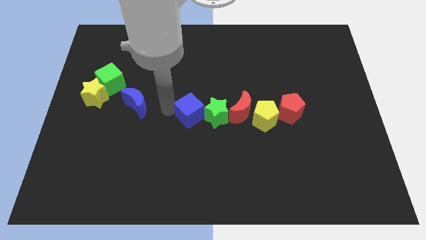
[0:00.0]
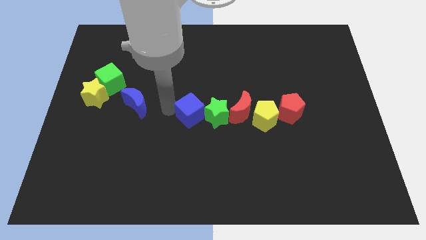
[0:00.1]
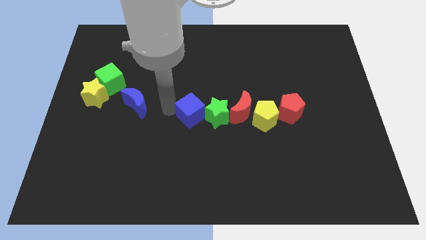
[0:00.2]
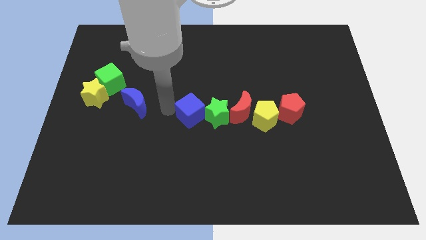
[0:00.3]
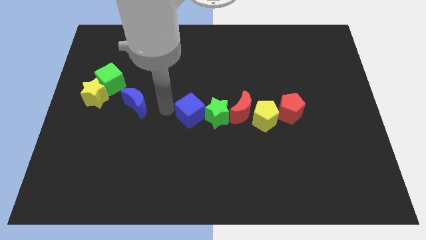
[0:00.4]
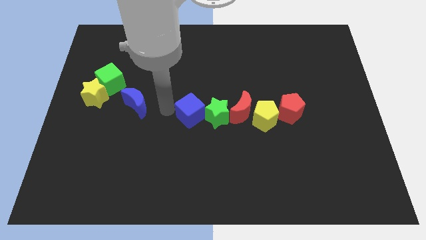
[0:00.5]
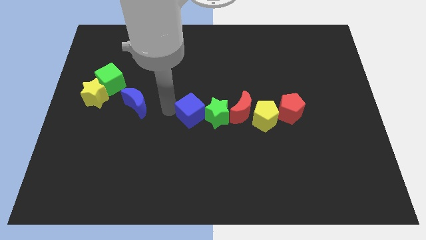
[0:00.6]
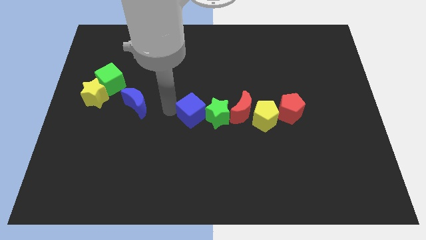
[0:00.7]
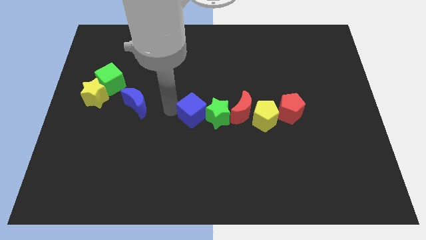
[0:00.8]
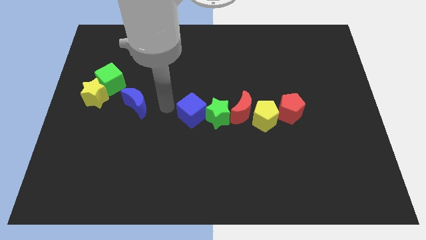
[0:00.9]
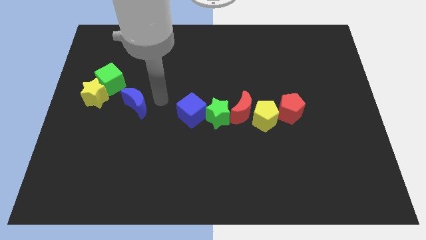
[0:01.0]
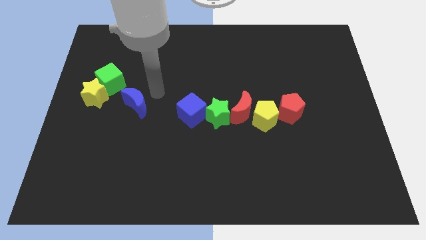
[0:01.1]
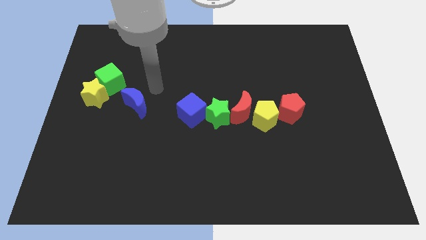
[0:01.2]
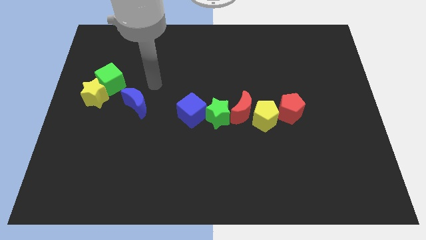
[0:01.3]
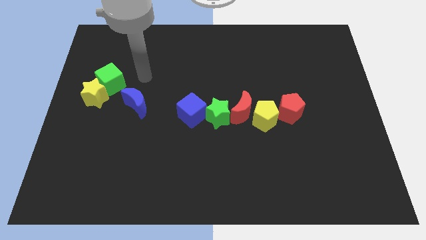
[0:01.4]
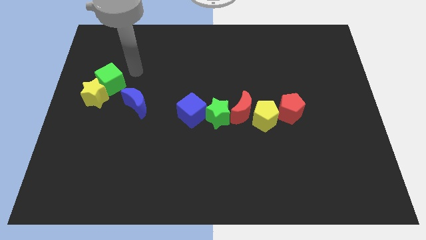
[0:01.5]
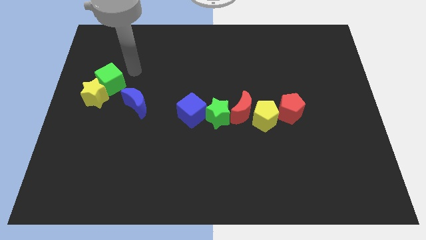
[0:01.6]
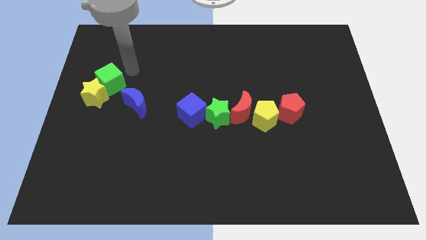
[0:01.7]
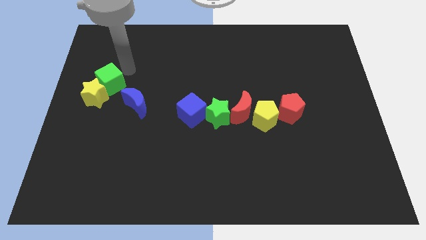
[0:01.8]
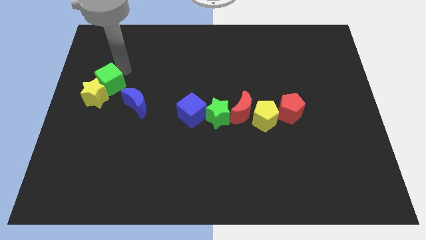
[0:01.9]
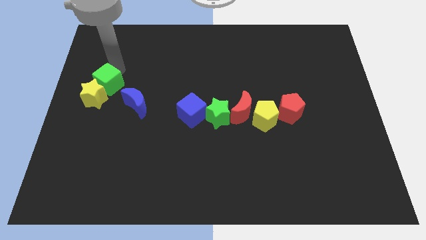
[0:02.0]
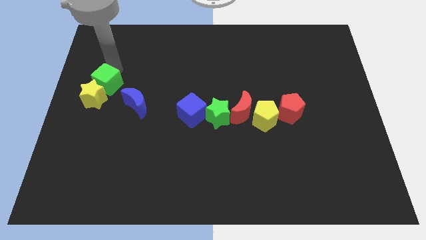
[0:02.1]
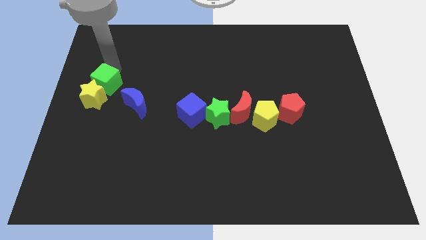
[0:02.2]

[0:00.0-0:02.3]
move the arm towards the green cube

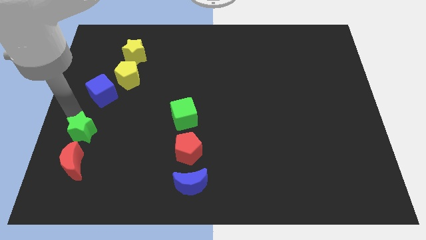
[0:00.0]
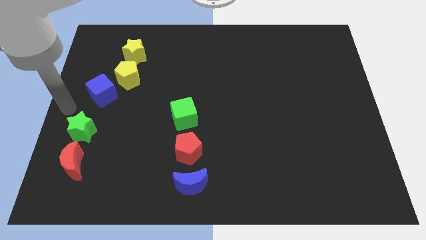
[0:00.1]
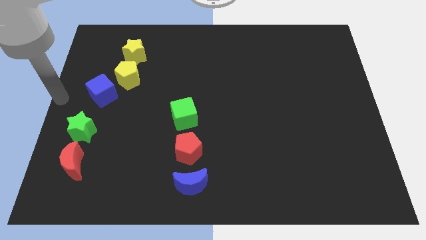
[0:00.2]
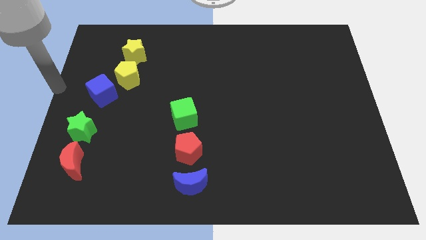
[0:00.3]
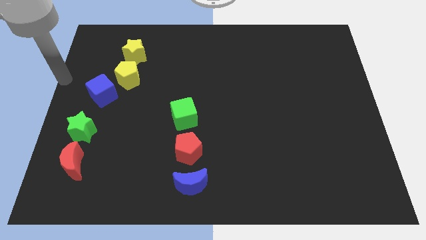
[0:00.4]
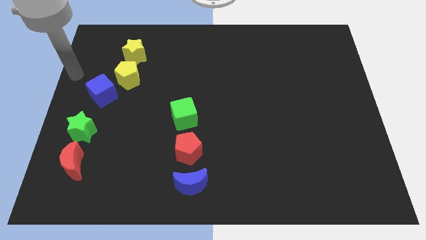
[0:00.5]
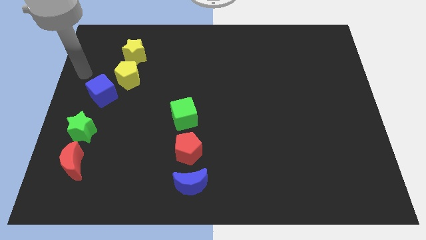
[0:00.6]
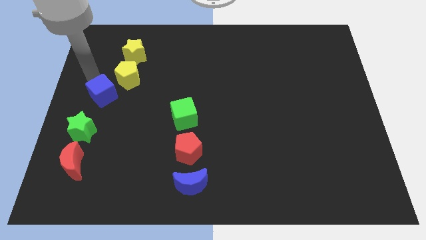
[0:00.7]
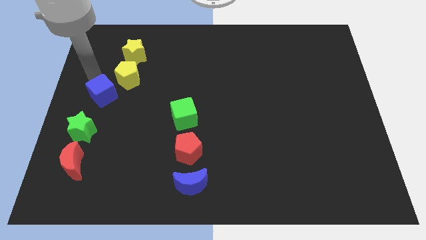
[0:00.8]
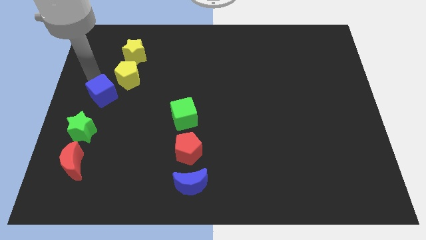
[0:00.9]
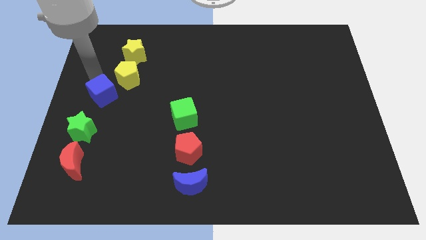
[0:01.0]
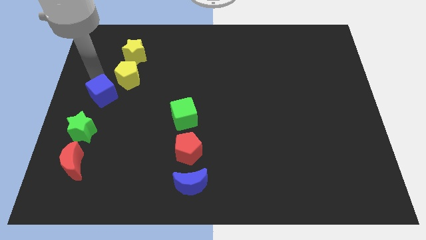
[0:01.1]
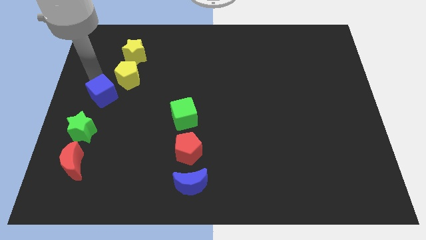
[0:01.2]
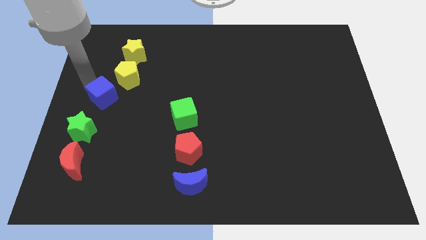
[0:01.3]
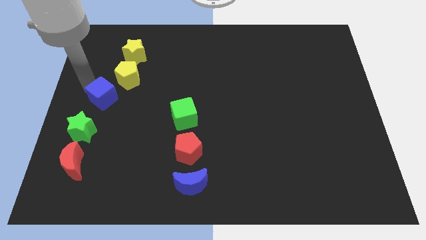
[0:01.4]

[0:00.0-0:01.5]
move your arm away from the green star

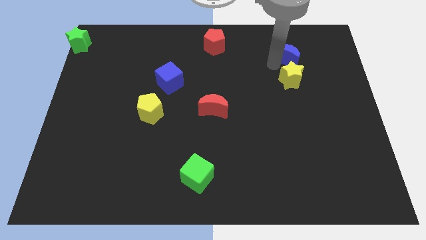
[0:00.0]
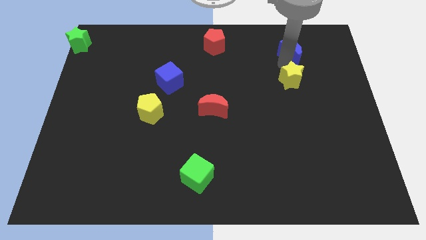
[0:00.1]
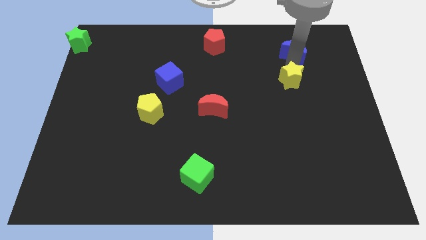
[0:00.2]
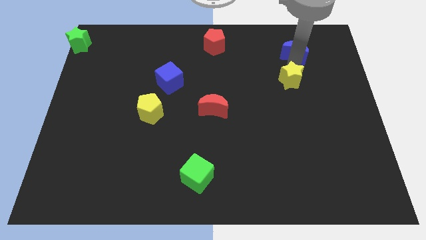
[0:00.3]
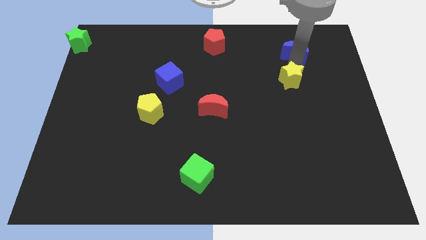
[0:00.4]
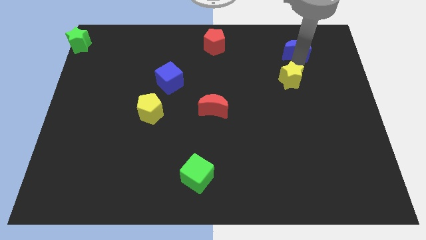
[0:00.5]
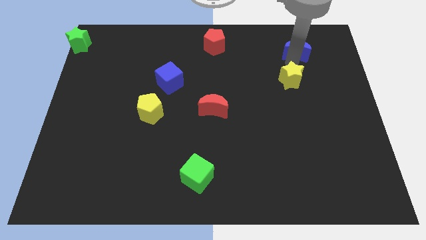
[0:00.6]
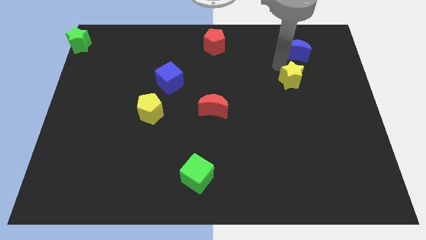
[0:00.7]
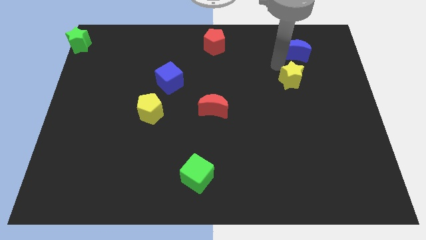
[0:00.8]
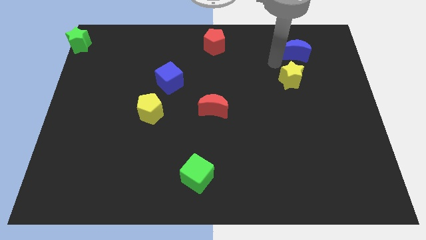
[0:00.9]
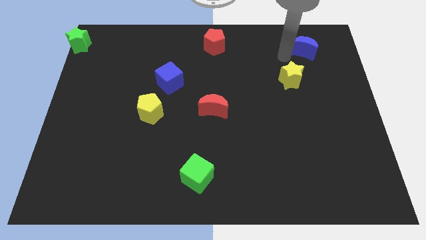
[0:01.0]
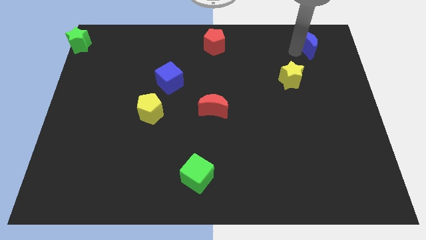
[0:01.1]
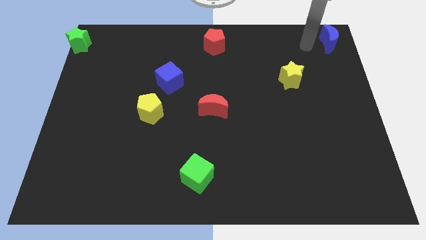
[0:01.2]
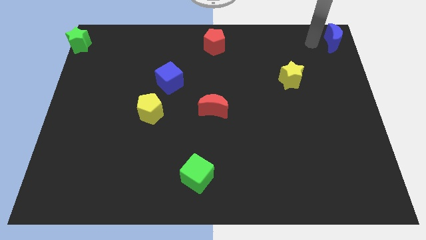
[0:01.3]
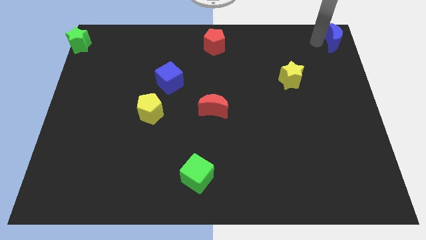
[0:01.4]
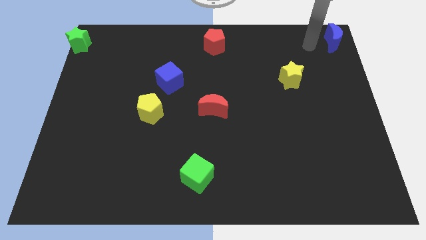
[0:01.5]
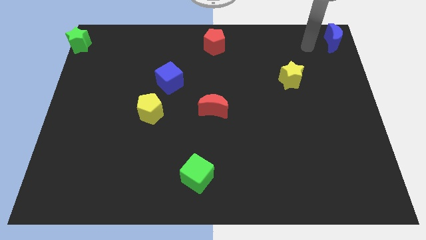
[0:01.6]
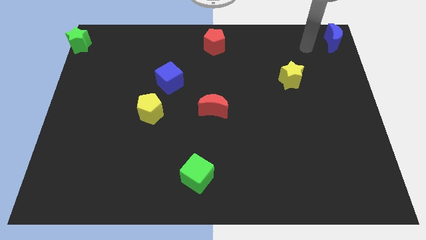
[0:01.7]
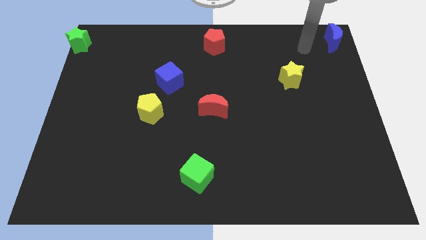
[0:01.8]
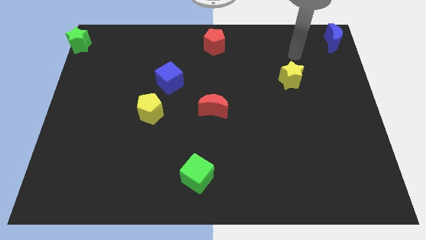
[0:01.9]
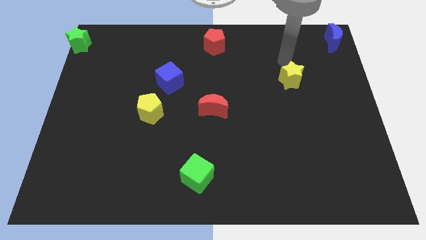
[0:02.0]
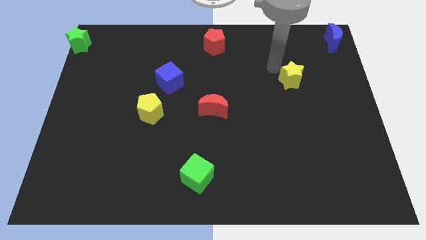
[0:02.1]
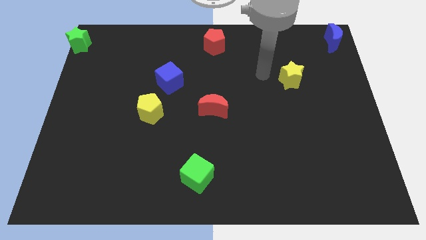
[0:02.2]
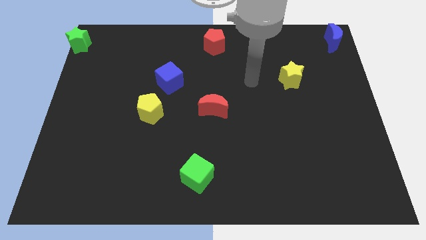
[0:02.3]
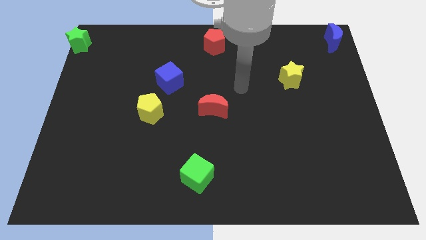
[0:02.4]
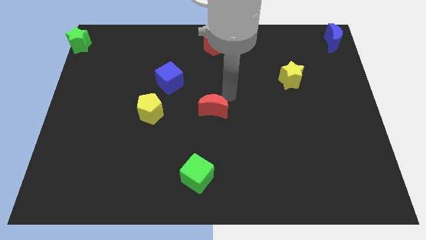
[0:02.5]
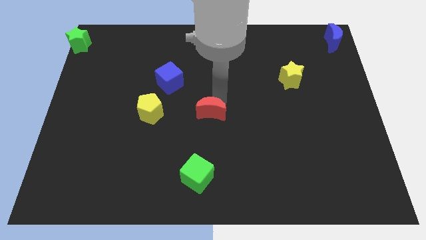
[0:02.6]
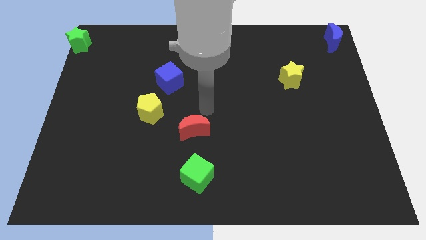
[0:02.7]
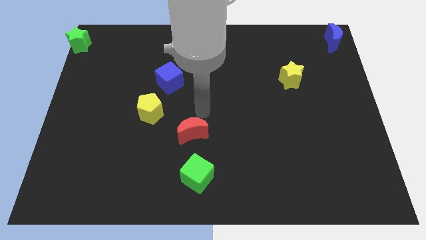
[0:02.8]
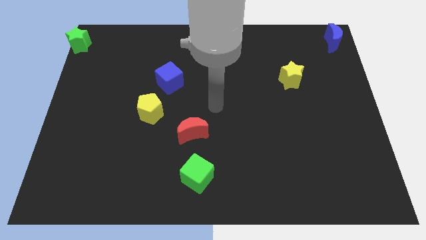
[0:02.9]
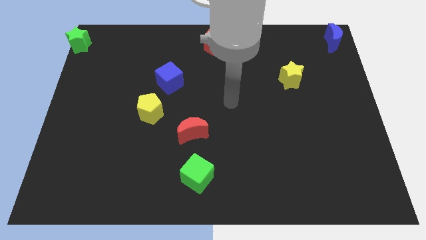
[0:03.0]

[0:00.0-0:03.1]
slide the blue crescent at the top right corner of the board

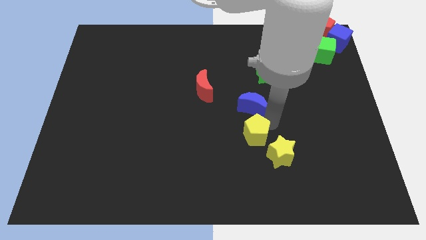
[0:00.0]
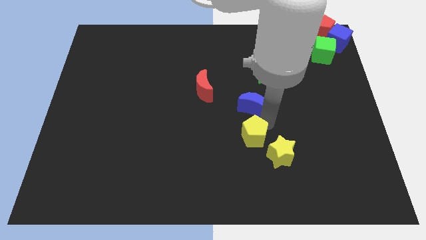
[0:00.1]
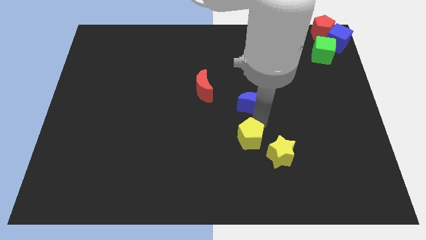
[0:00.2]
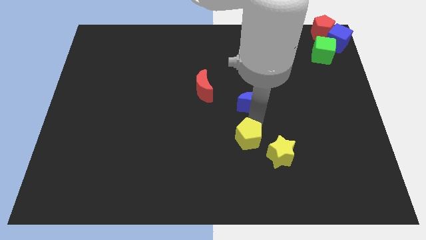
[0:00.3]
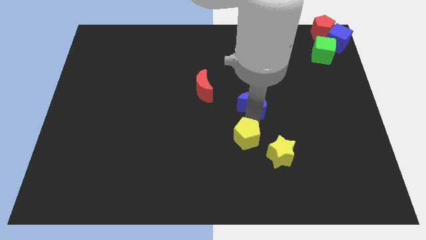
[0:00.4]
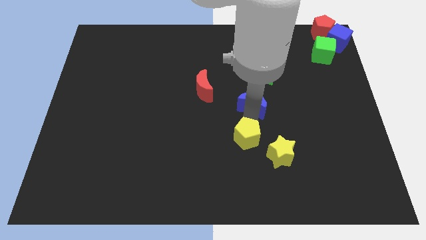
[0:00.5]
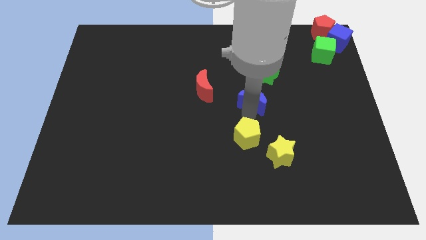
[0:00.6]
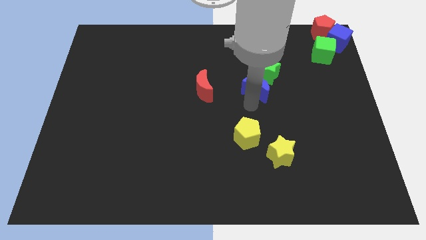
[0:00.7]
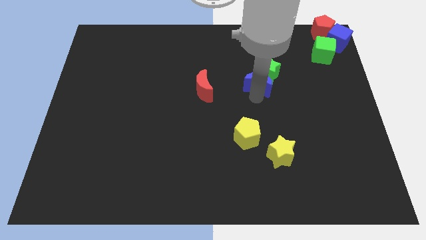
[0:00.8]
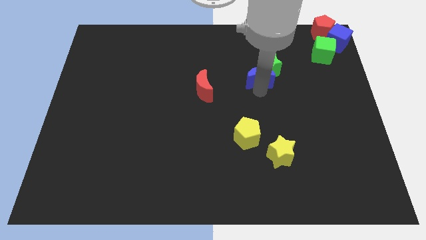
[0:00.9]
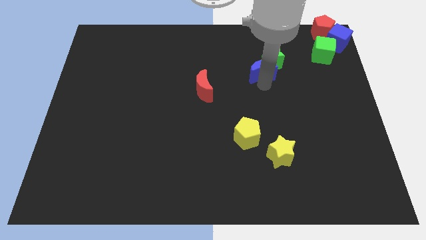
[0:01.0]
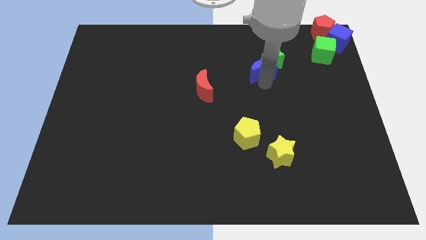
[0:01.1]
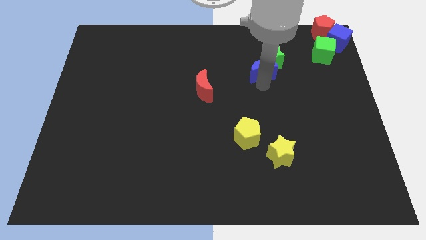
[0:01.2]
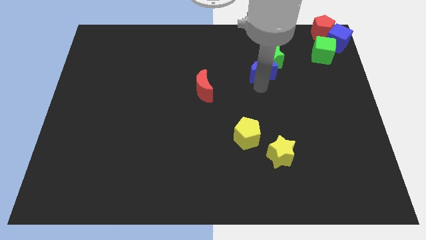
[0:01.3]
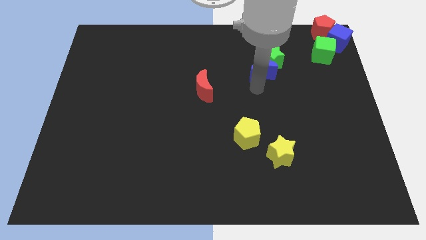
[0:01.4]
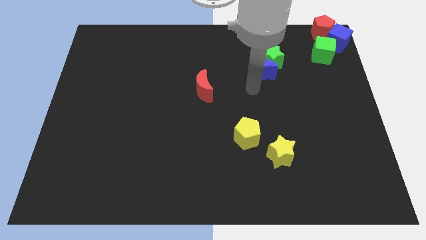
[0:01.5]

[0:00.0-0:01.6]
drag the blue moon close to the green star

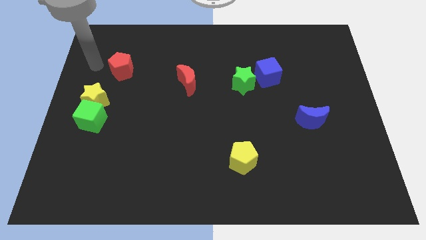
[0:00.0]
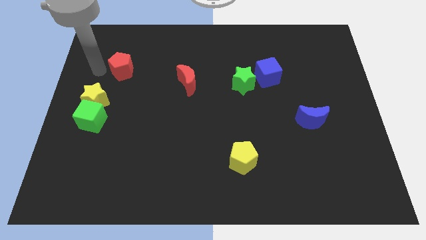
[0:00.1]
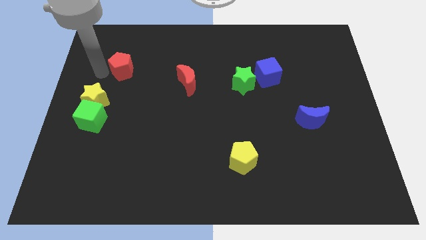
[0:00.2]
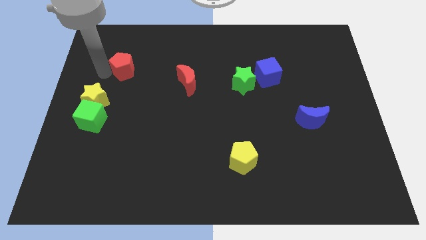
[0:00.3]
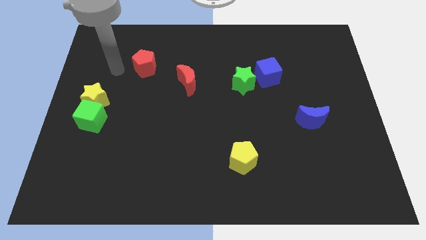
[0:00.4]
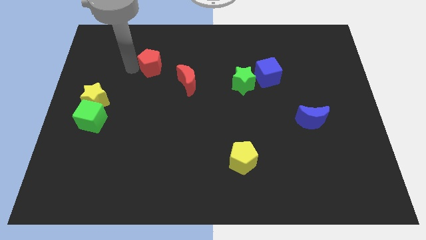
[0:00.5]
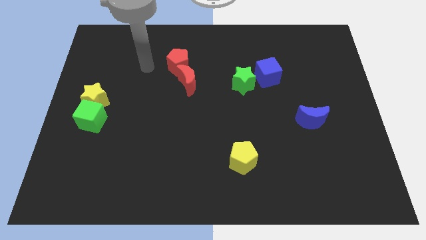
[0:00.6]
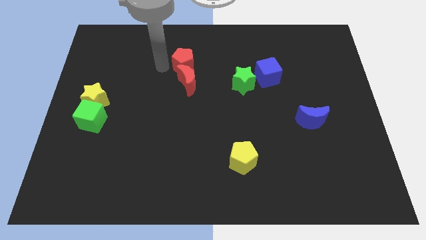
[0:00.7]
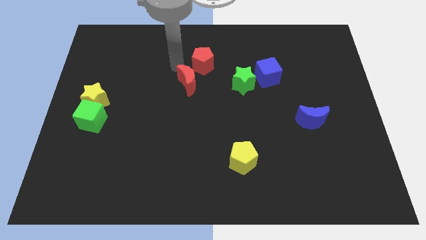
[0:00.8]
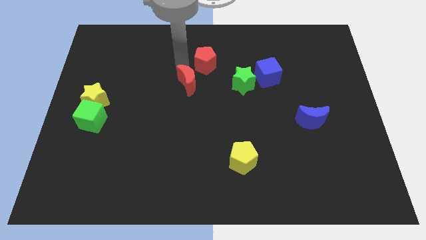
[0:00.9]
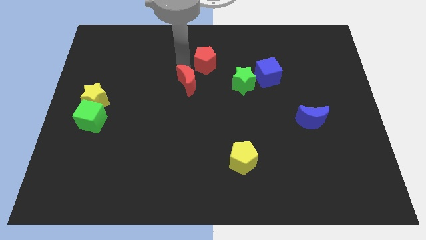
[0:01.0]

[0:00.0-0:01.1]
push the red pentagon to the top right of the red crescent
